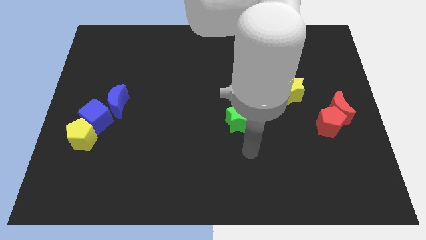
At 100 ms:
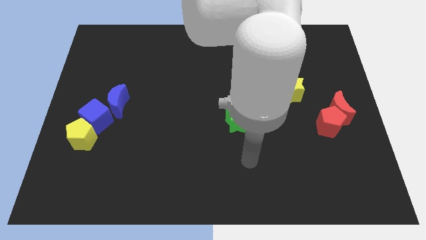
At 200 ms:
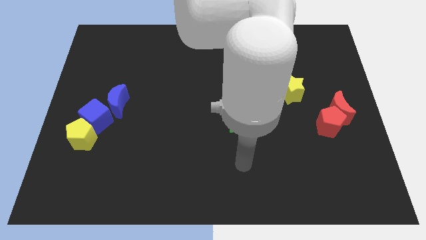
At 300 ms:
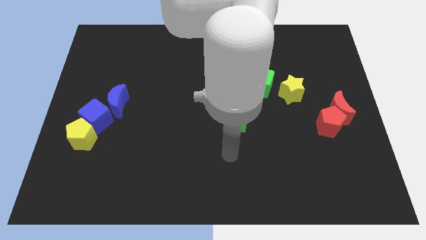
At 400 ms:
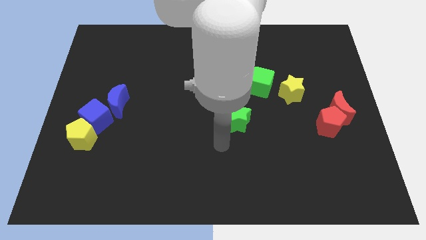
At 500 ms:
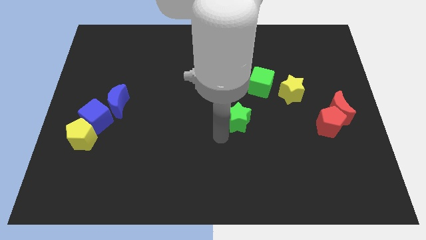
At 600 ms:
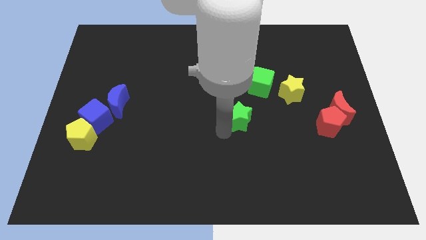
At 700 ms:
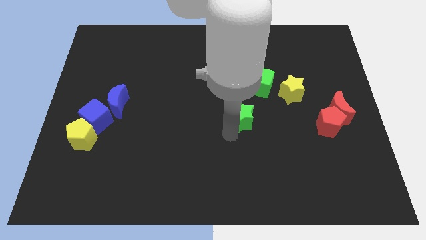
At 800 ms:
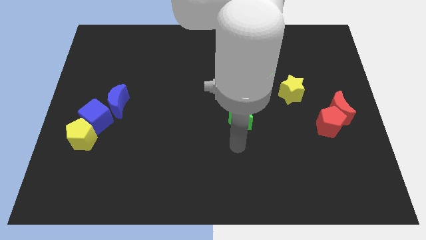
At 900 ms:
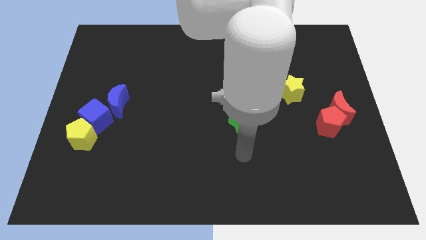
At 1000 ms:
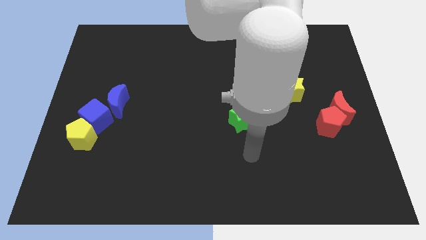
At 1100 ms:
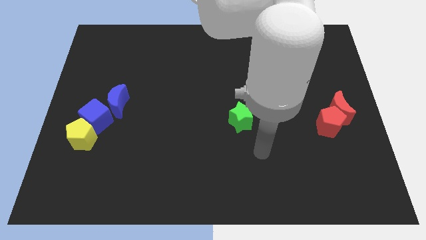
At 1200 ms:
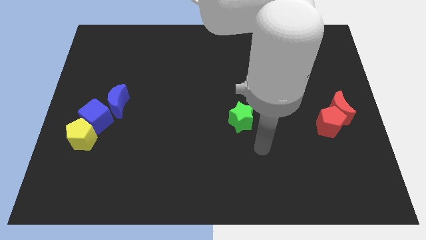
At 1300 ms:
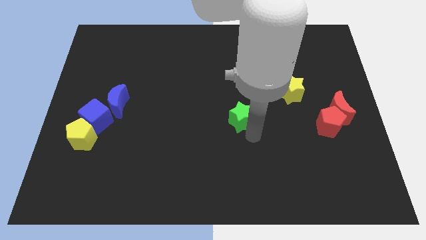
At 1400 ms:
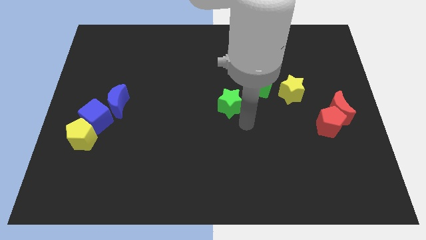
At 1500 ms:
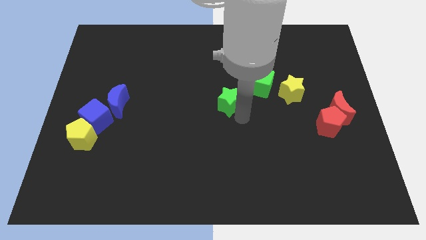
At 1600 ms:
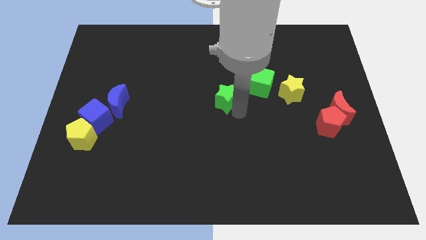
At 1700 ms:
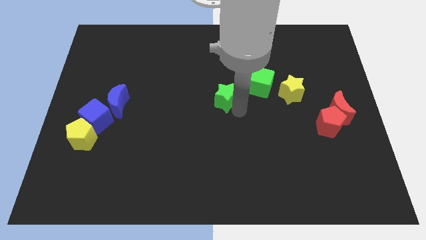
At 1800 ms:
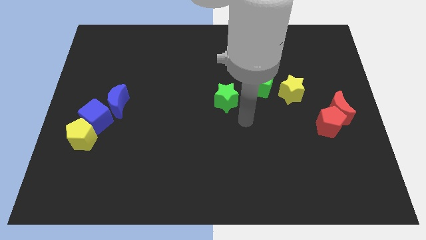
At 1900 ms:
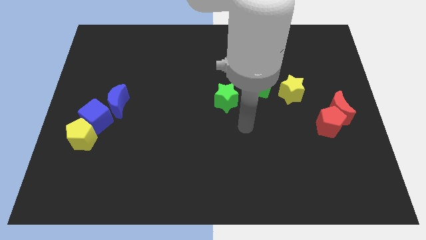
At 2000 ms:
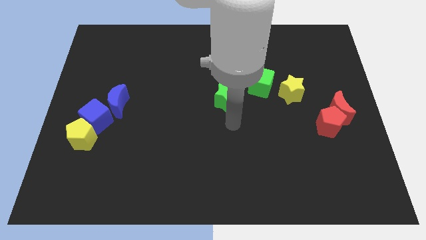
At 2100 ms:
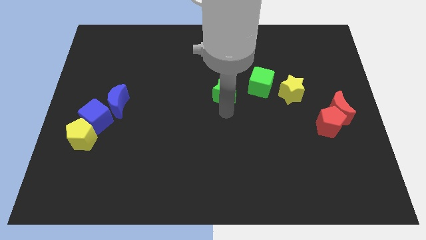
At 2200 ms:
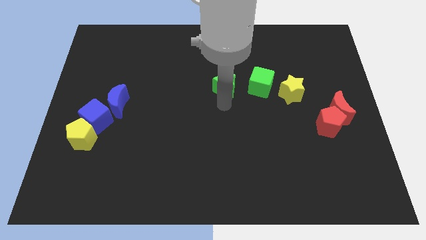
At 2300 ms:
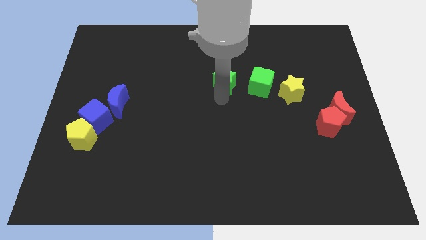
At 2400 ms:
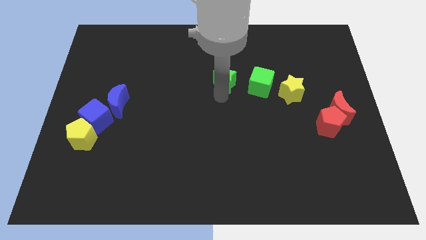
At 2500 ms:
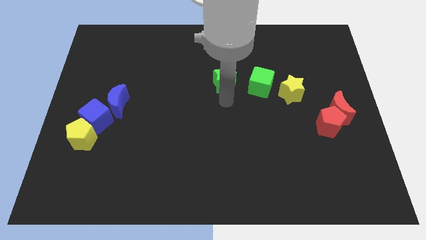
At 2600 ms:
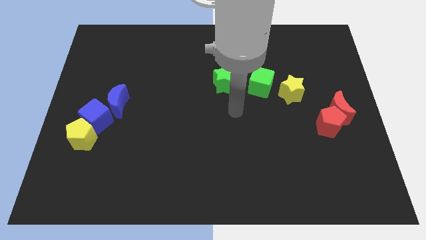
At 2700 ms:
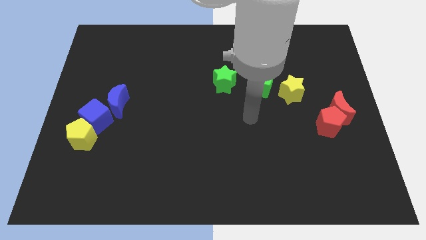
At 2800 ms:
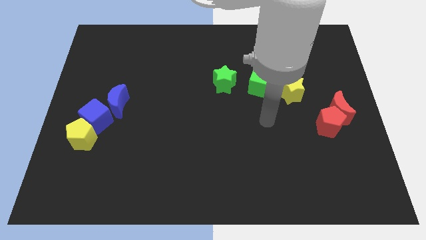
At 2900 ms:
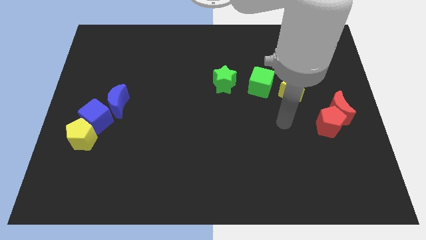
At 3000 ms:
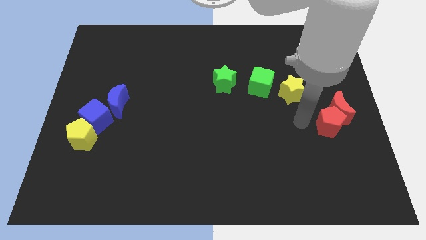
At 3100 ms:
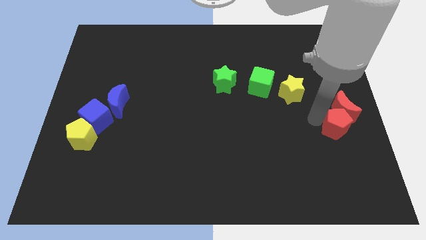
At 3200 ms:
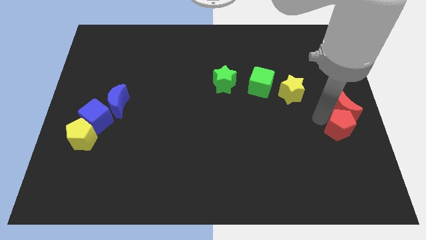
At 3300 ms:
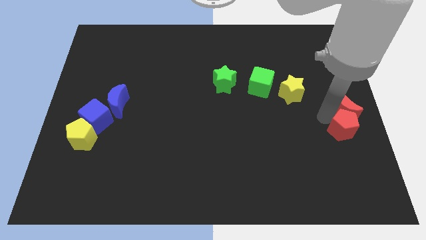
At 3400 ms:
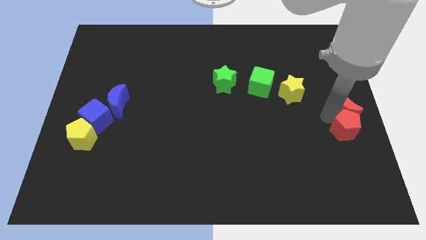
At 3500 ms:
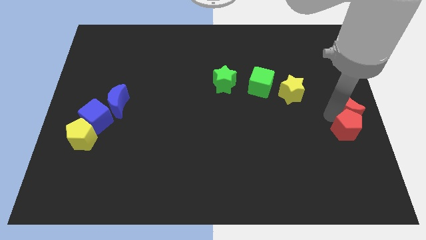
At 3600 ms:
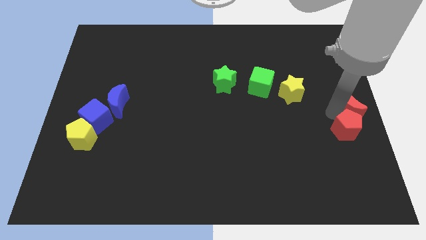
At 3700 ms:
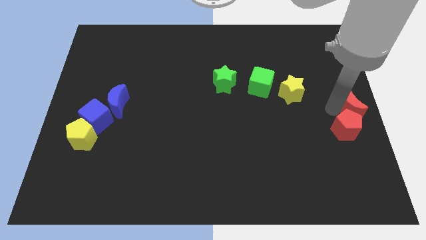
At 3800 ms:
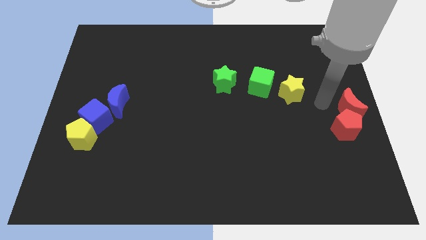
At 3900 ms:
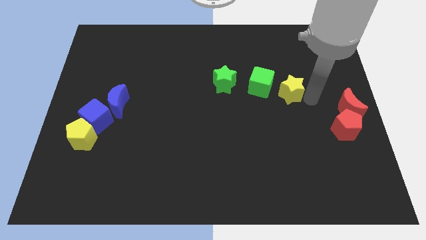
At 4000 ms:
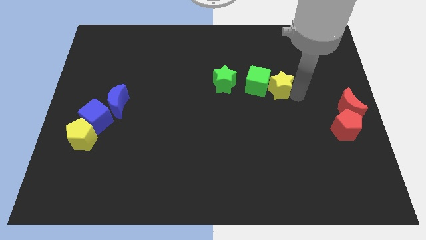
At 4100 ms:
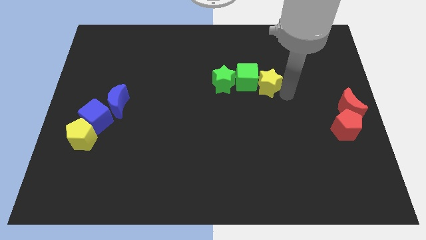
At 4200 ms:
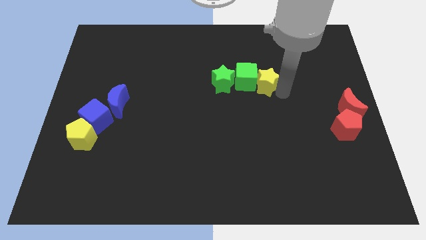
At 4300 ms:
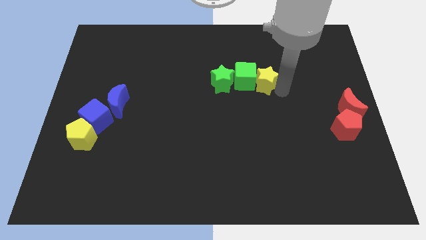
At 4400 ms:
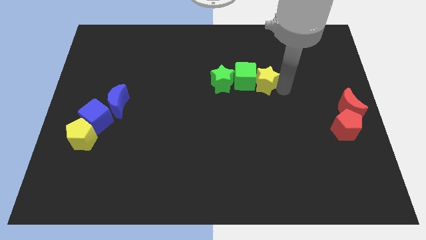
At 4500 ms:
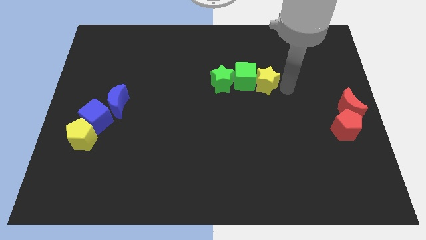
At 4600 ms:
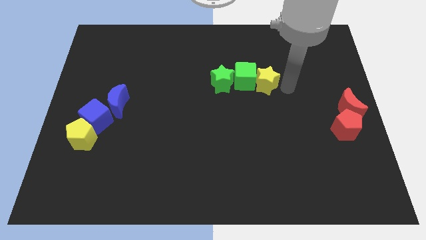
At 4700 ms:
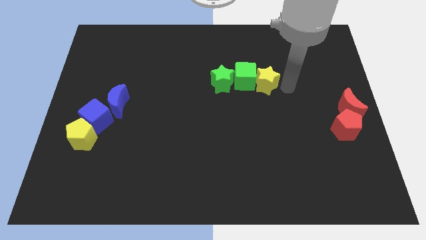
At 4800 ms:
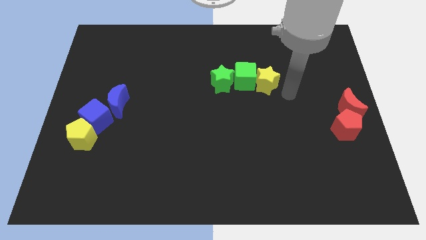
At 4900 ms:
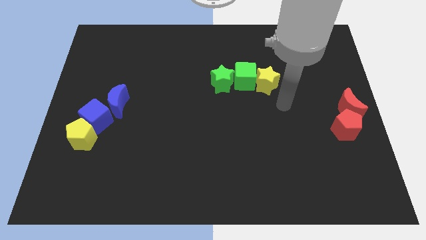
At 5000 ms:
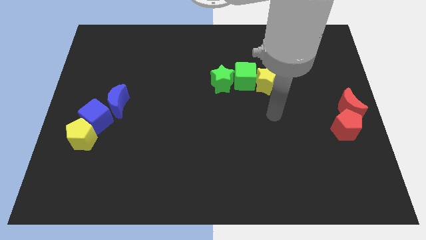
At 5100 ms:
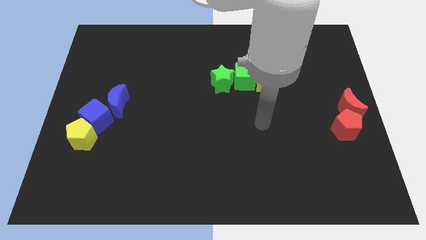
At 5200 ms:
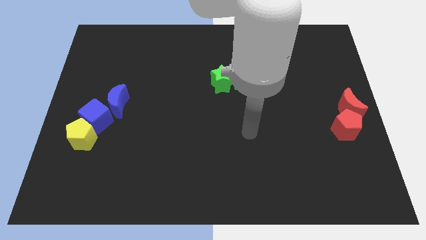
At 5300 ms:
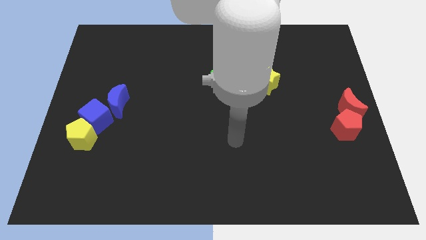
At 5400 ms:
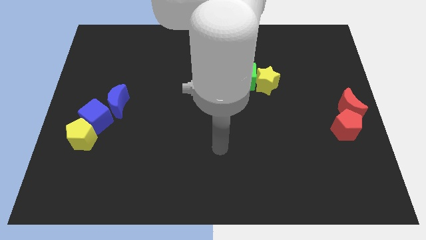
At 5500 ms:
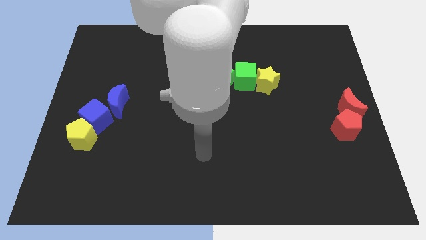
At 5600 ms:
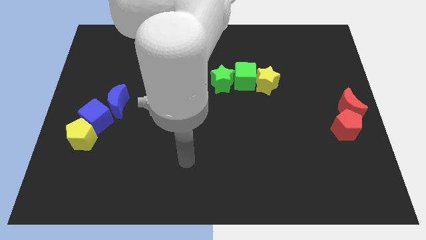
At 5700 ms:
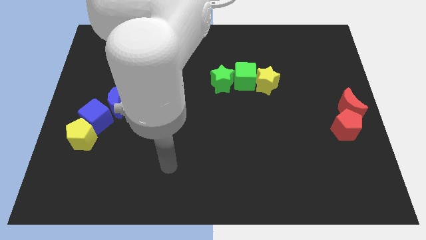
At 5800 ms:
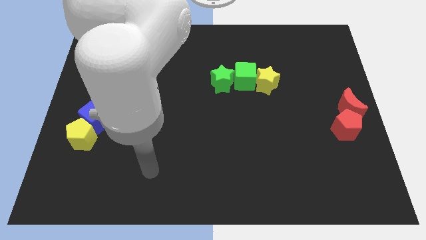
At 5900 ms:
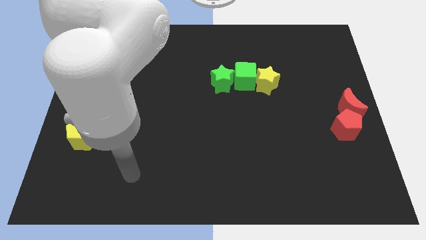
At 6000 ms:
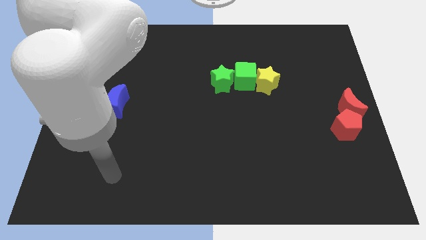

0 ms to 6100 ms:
slide the yellow star into the green cube

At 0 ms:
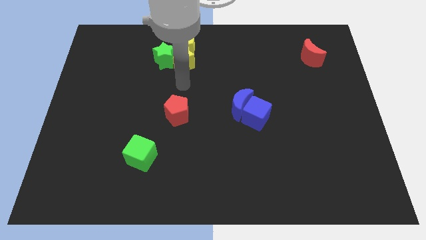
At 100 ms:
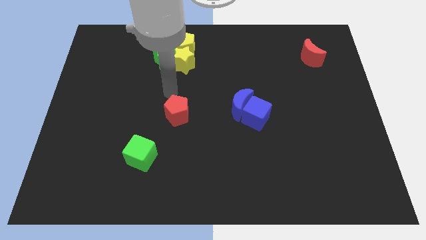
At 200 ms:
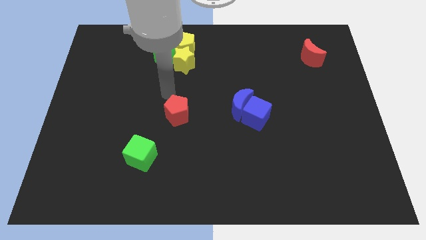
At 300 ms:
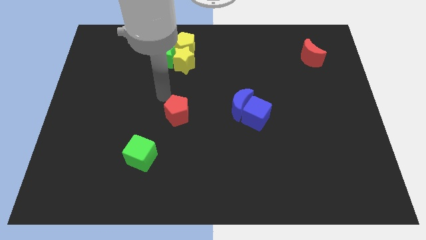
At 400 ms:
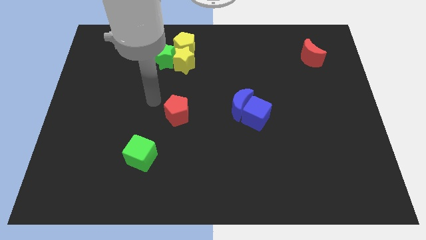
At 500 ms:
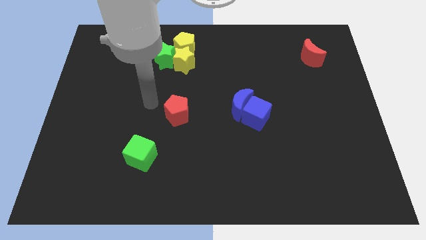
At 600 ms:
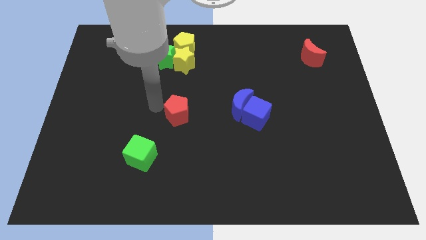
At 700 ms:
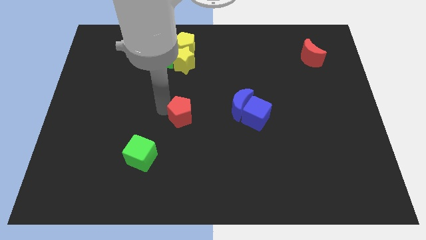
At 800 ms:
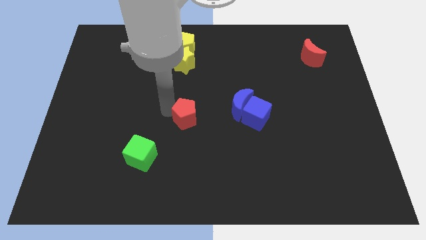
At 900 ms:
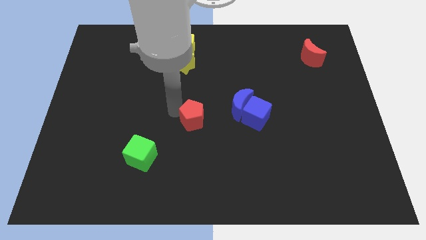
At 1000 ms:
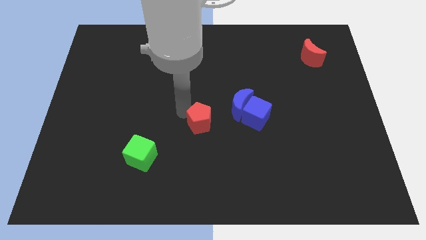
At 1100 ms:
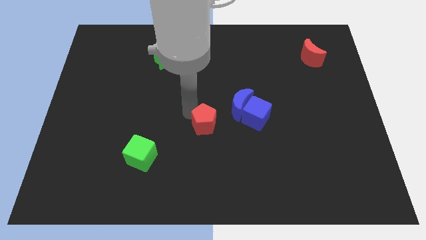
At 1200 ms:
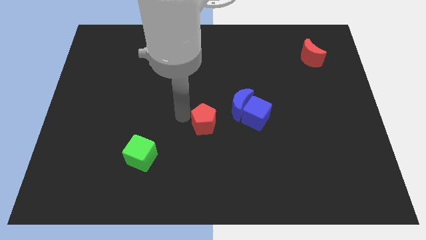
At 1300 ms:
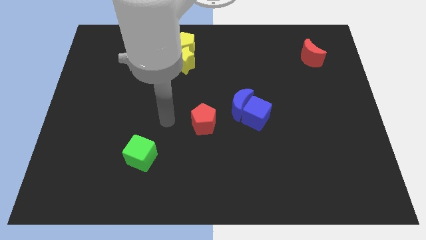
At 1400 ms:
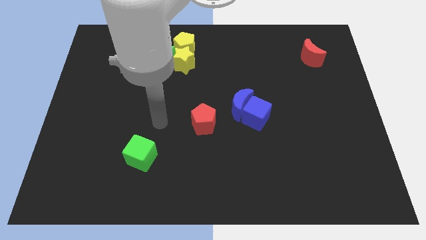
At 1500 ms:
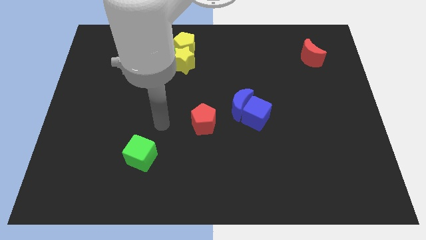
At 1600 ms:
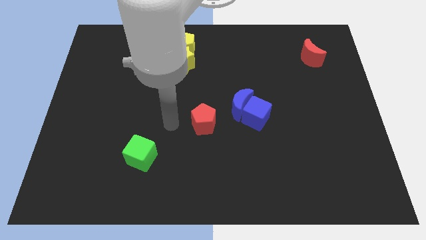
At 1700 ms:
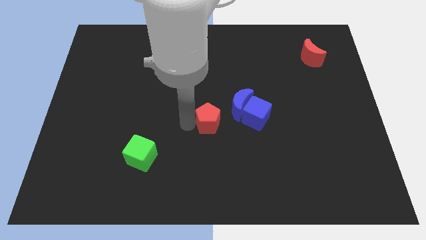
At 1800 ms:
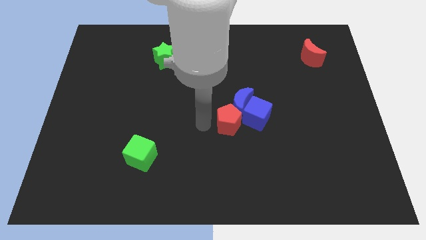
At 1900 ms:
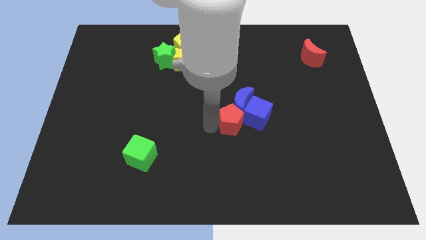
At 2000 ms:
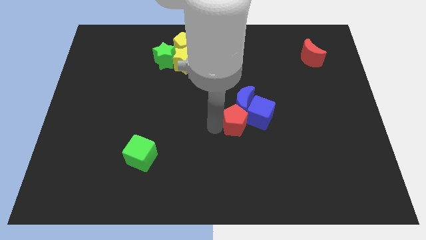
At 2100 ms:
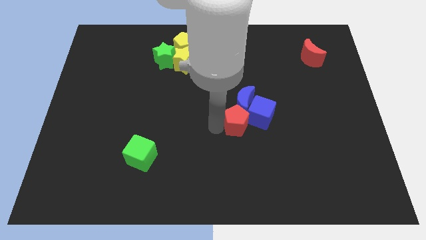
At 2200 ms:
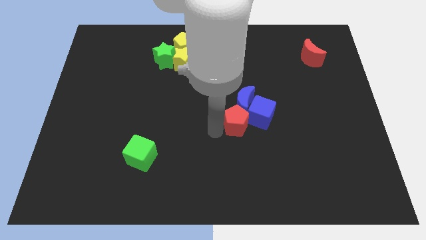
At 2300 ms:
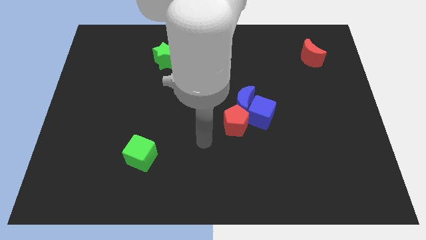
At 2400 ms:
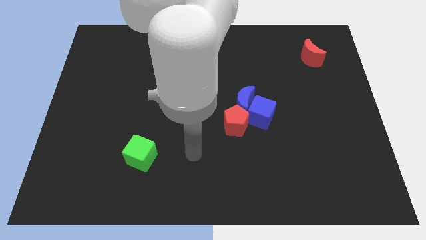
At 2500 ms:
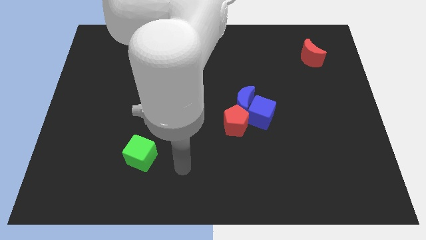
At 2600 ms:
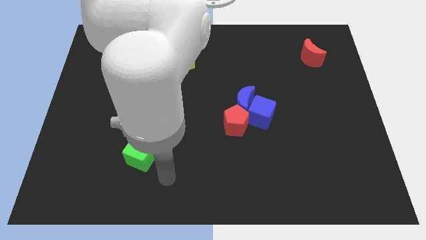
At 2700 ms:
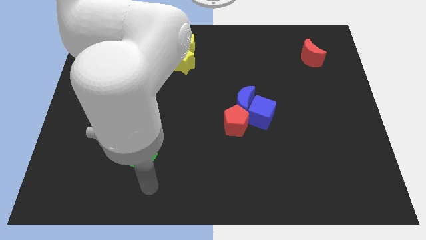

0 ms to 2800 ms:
move red pentagon into blue cube
